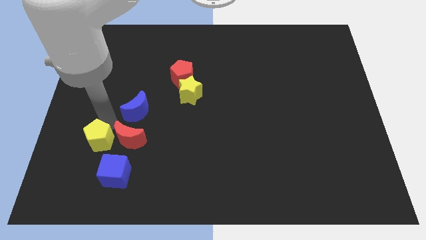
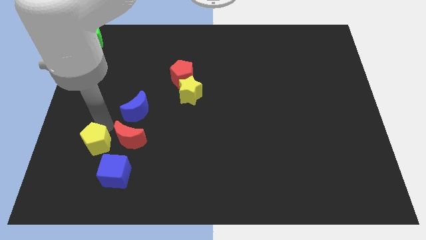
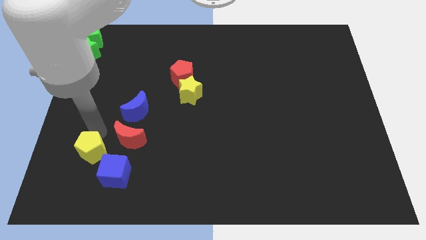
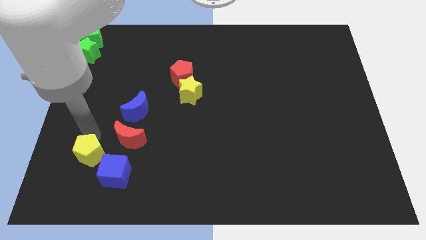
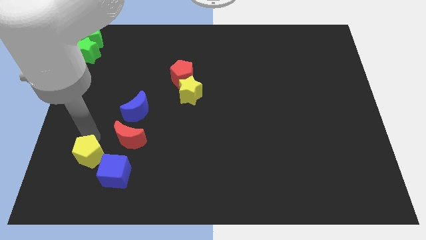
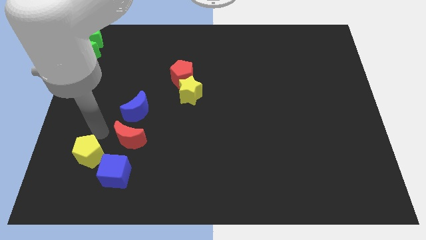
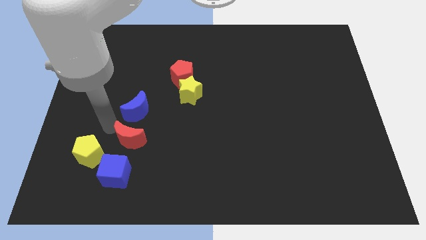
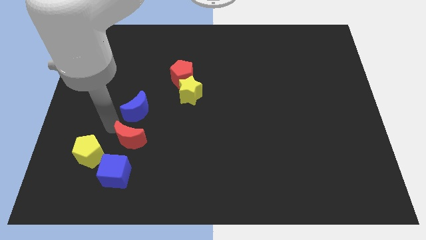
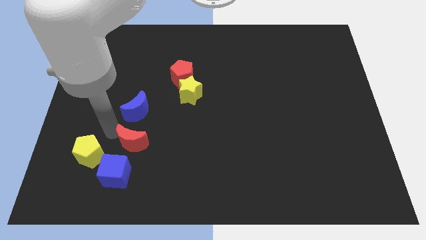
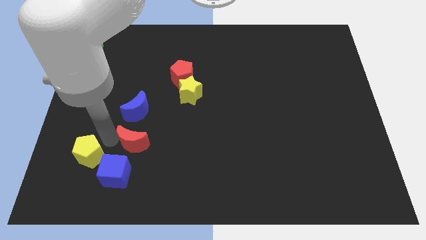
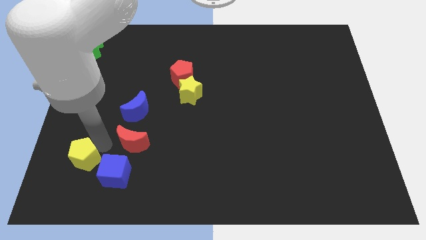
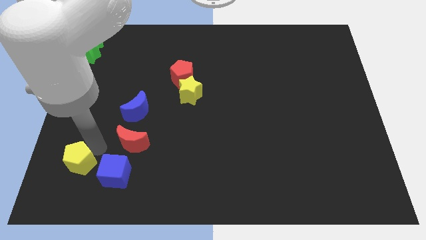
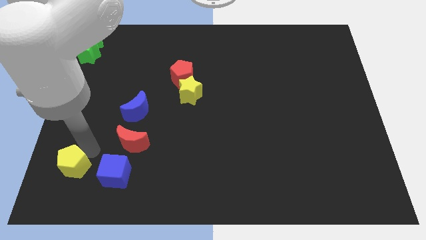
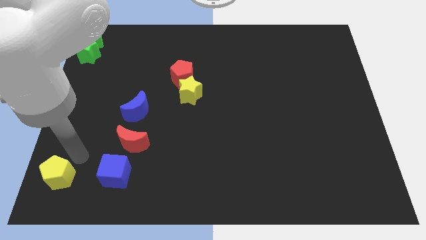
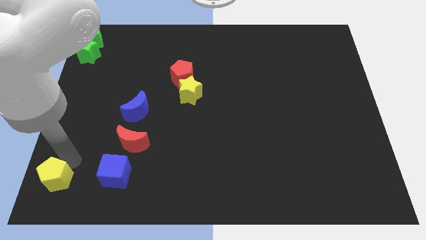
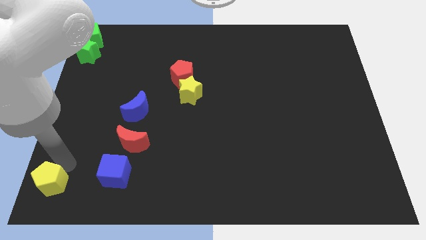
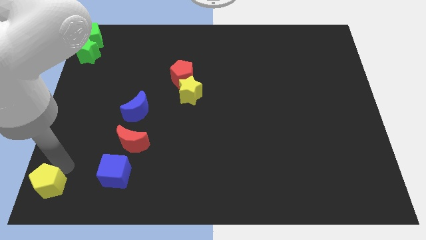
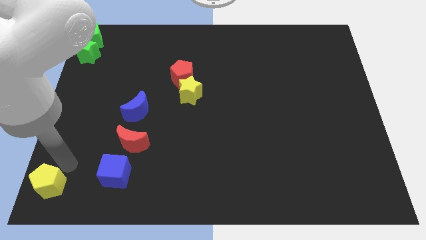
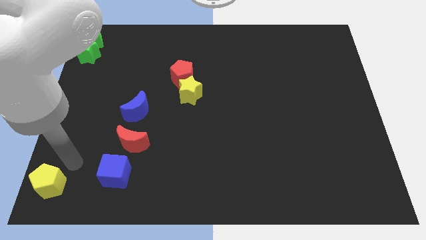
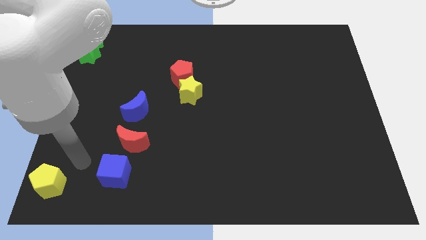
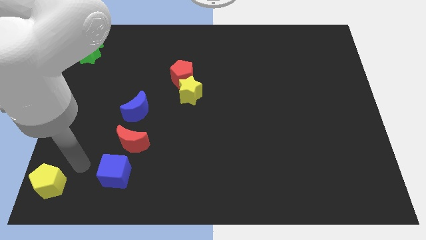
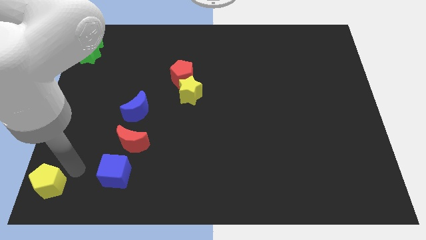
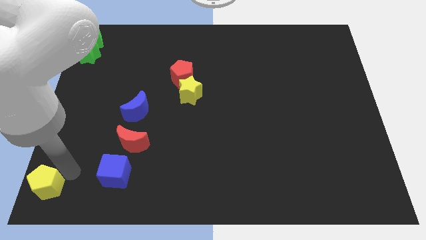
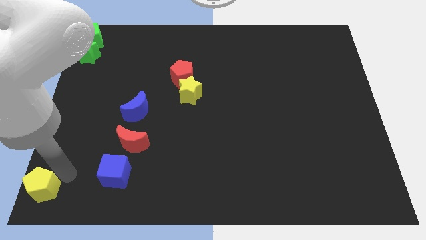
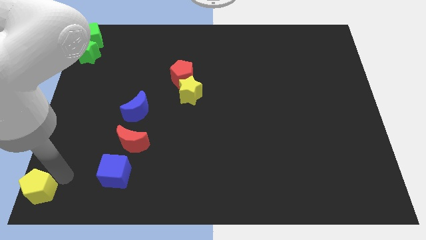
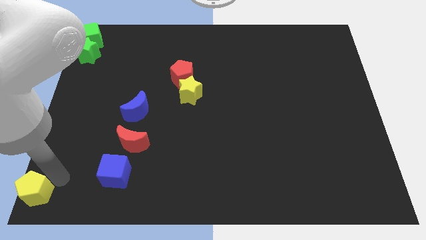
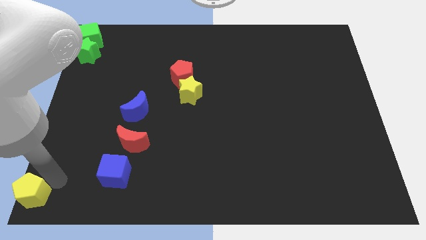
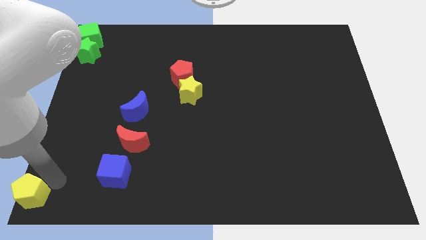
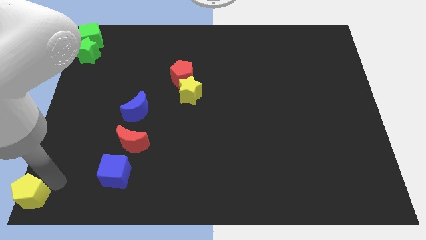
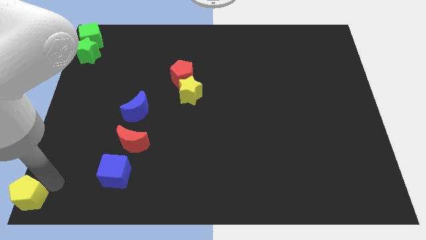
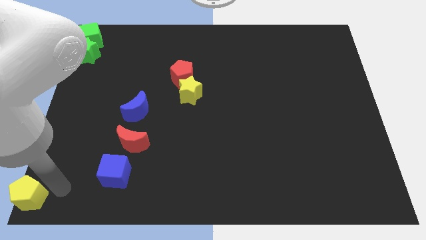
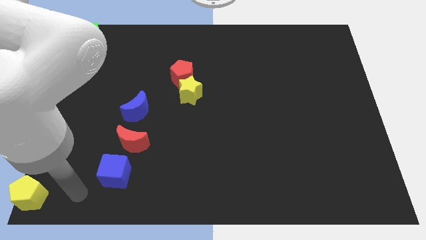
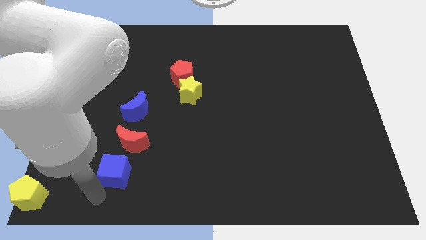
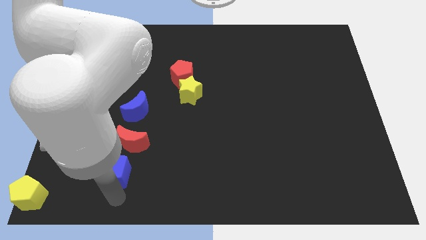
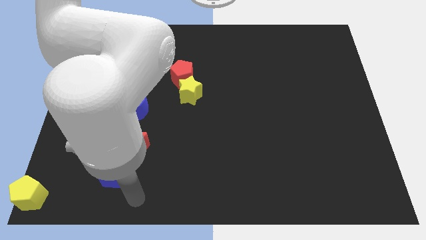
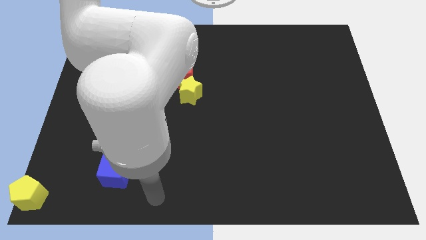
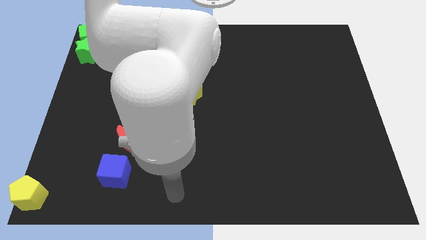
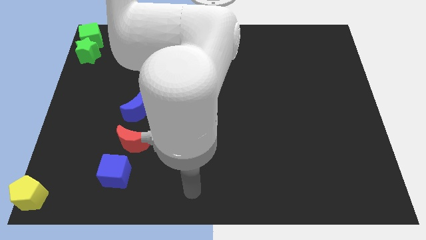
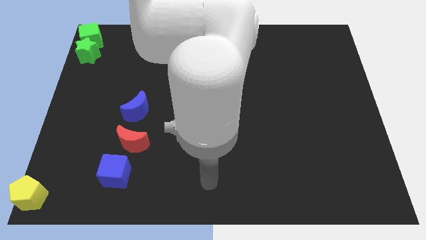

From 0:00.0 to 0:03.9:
move the yellow pentagon to the bottom left

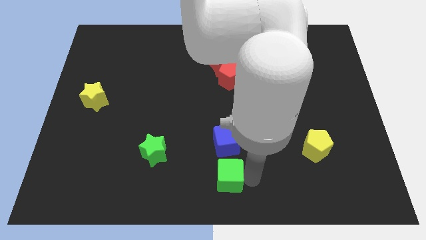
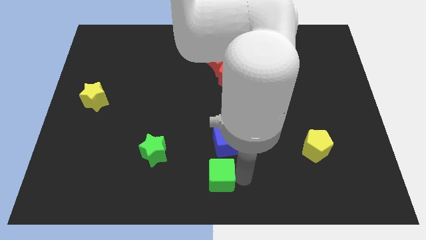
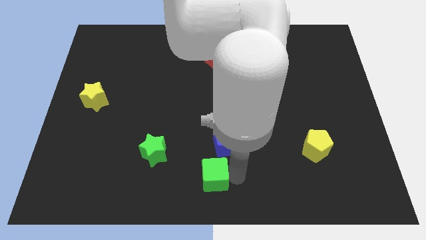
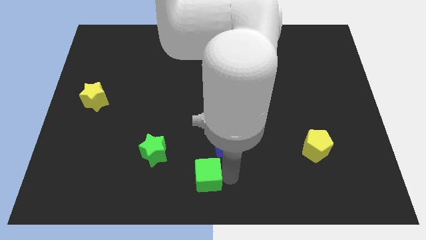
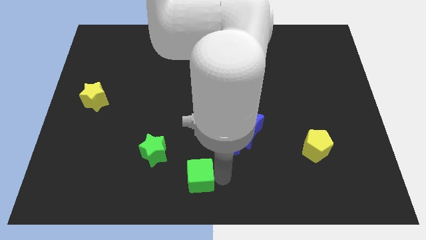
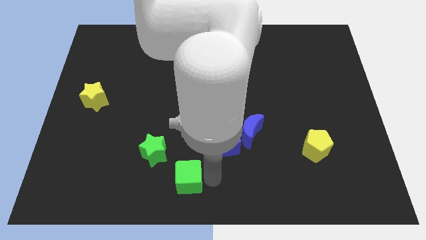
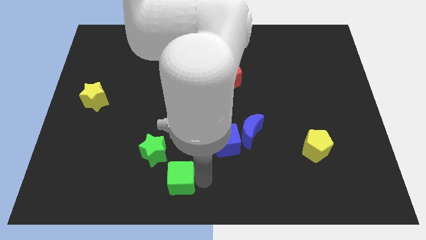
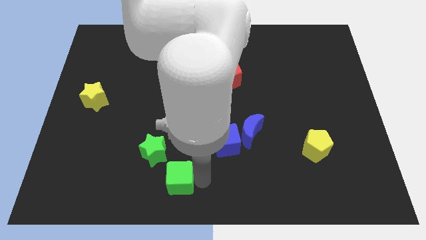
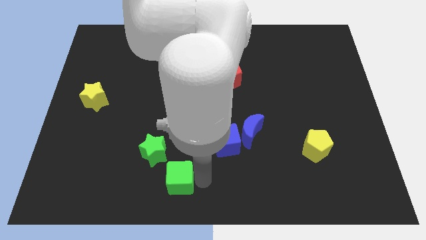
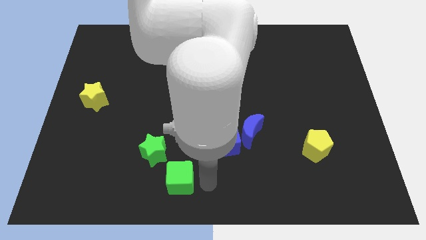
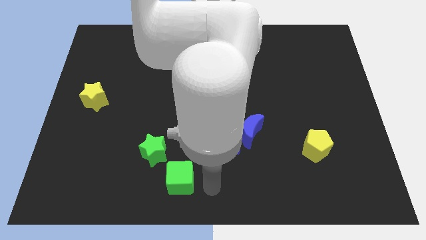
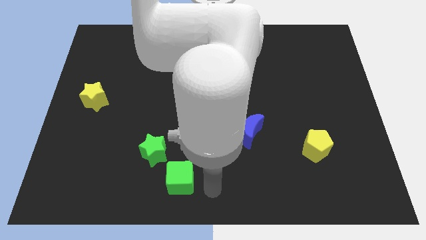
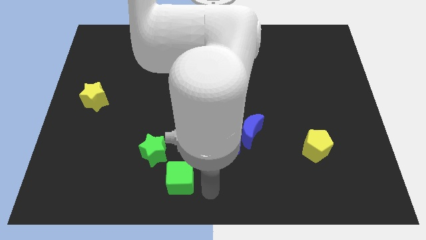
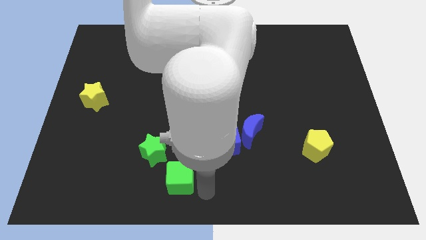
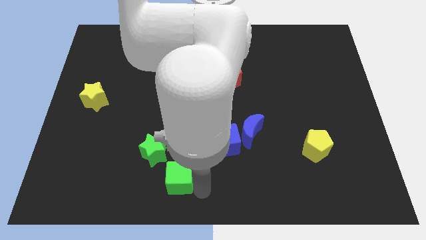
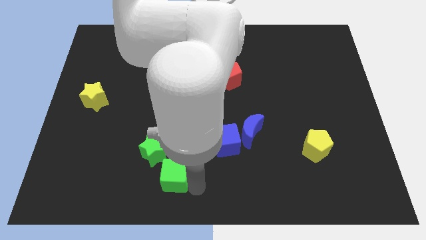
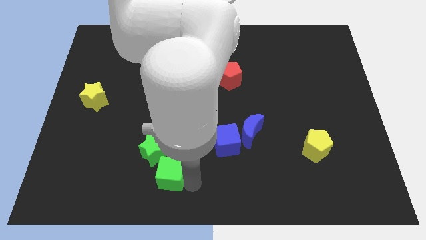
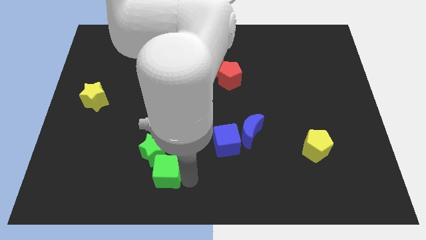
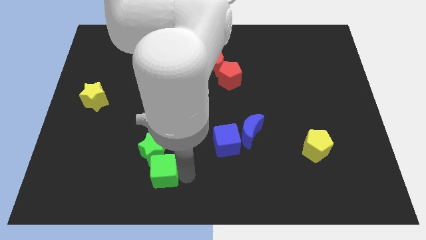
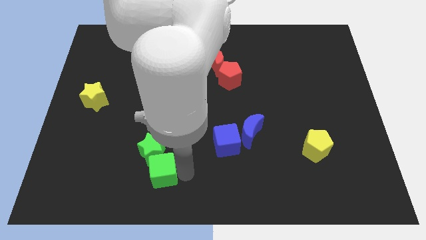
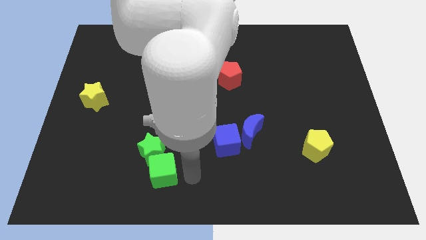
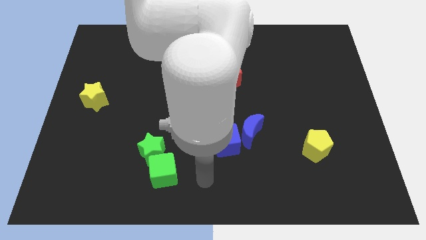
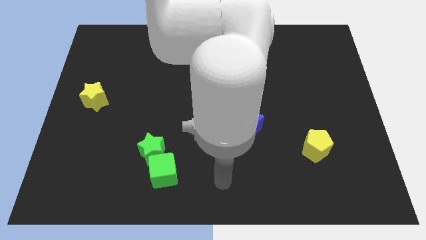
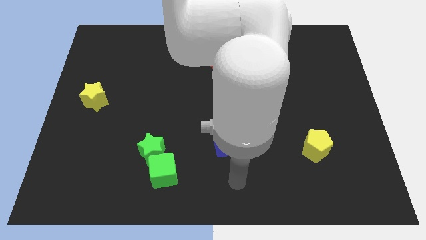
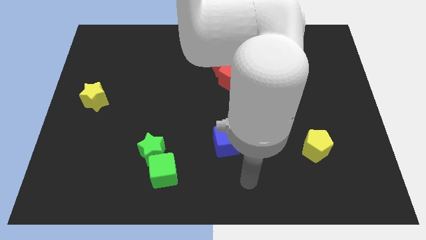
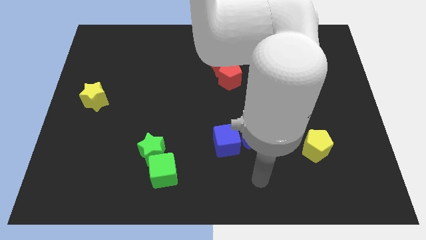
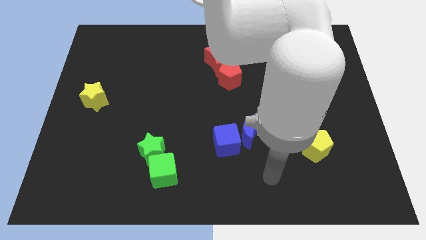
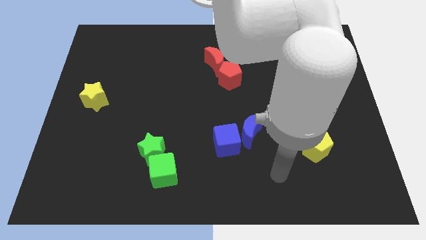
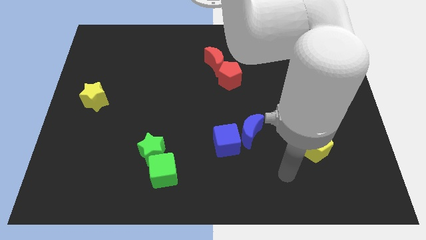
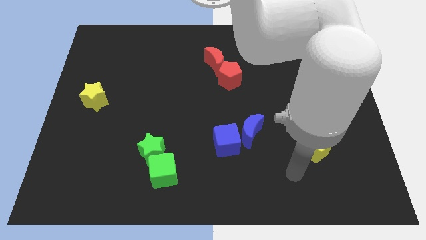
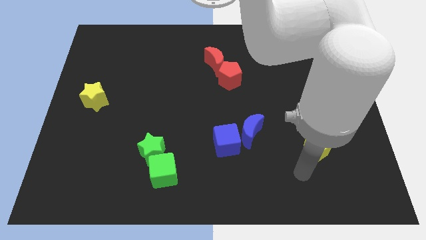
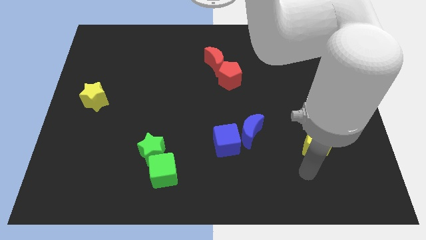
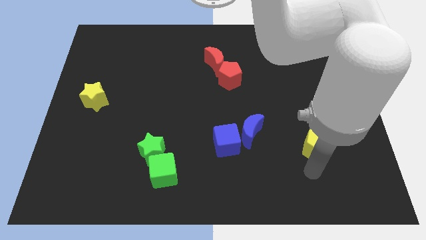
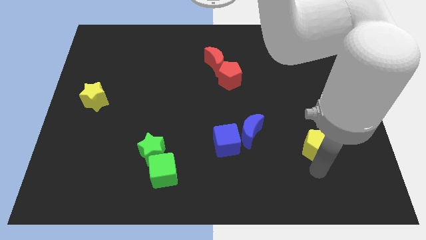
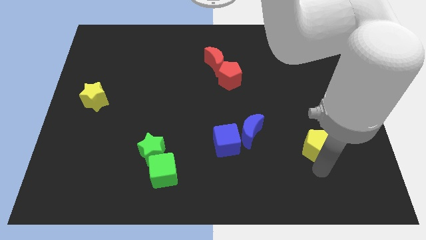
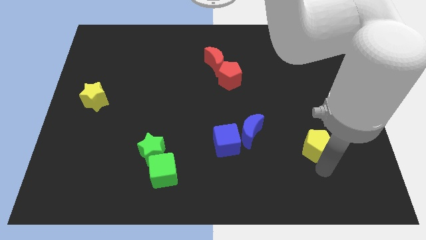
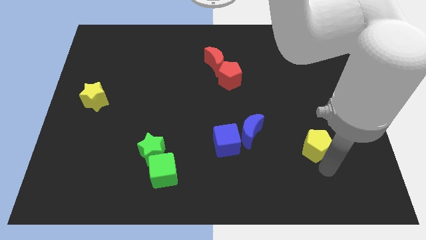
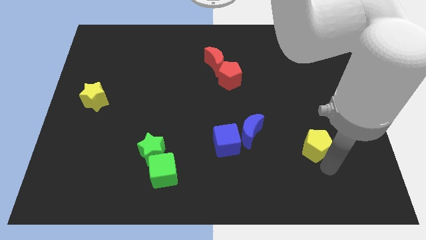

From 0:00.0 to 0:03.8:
move the green cube into the green star diagonally from the bottom right

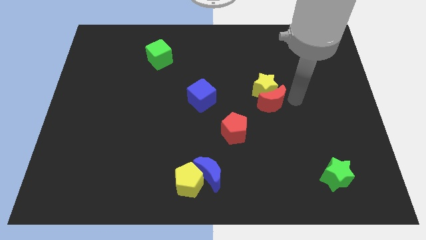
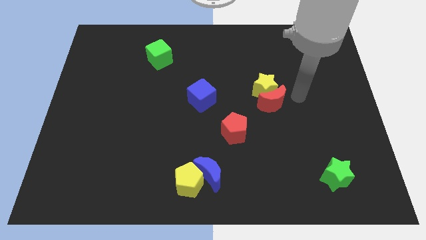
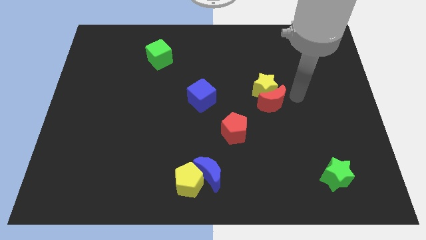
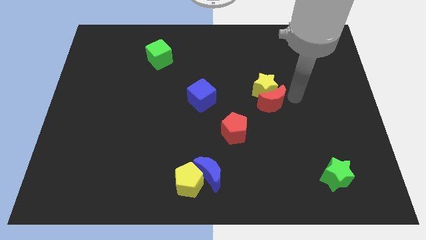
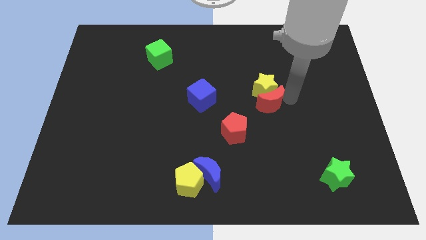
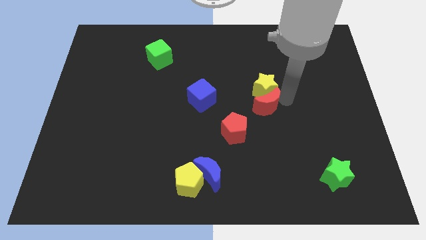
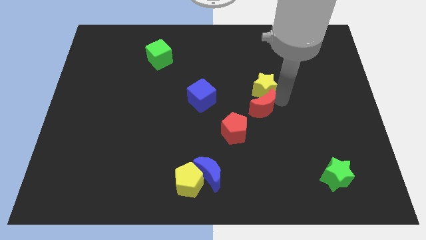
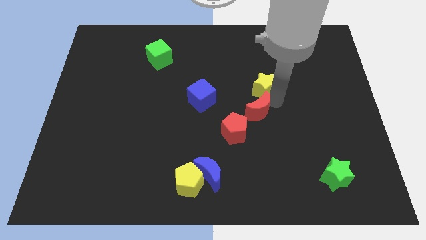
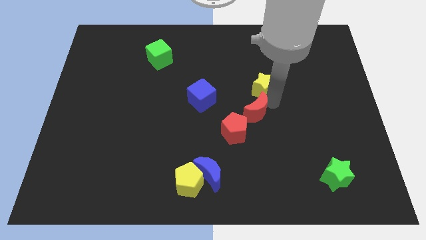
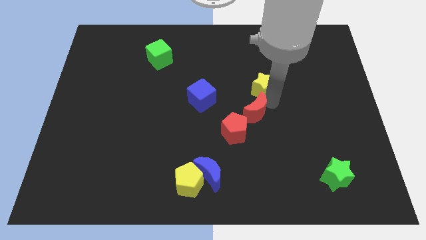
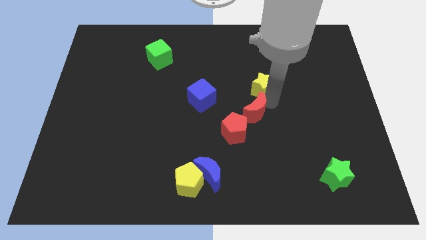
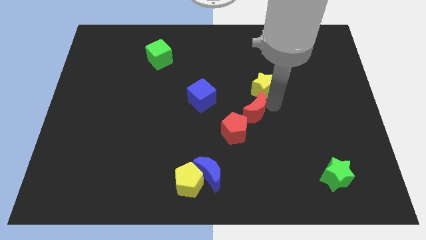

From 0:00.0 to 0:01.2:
separate the red crescent and yellow star

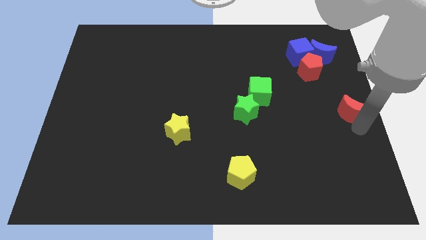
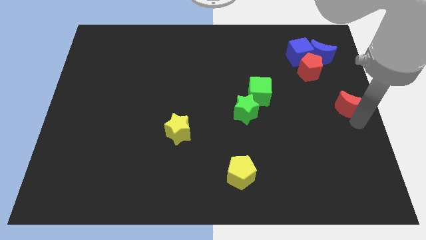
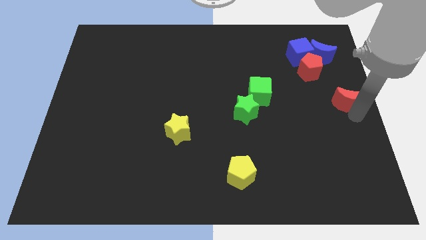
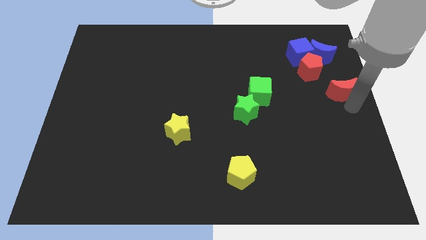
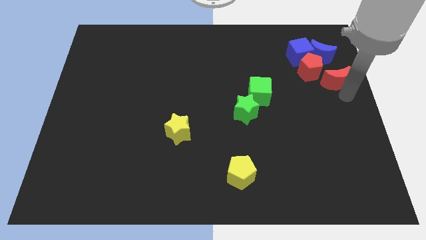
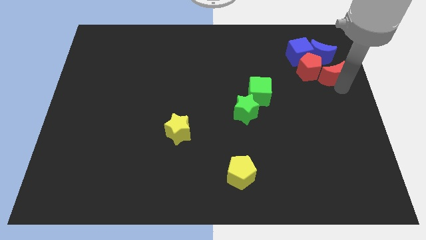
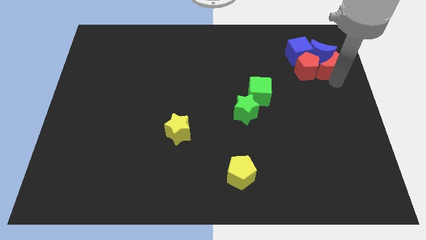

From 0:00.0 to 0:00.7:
place red crescent below blue crescent
